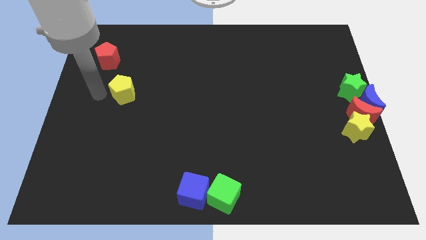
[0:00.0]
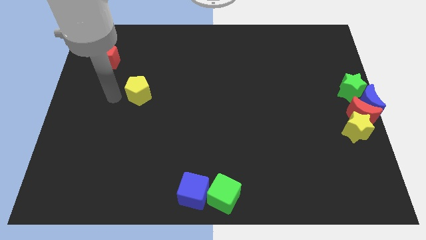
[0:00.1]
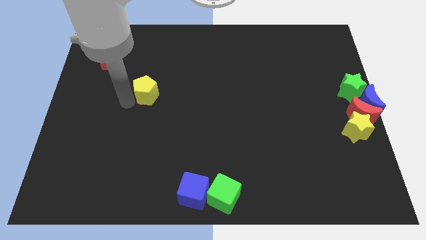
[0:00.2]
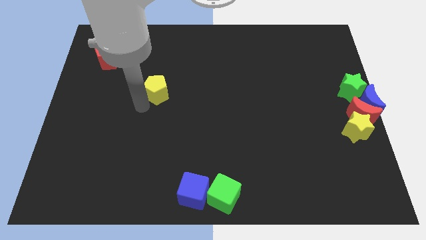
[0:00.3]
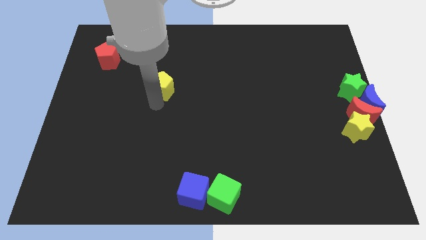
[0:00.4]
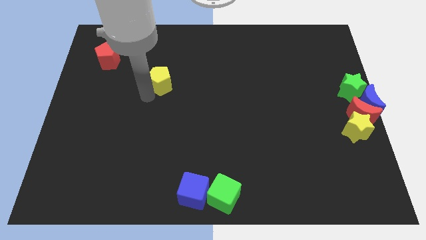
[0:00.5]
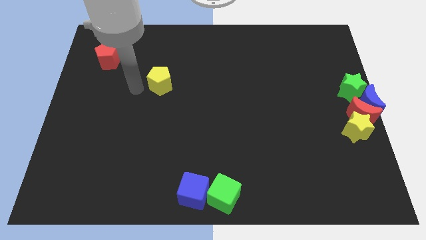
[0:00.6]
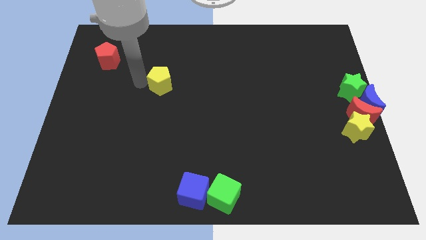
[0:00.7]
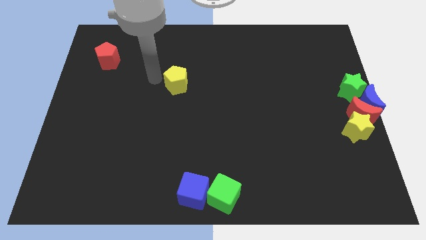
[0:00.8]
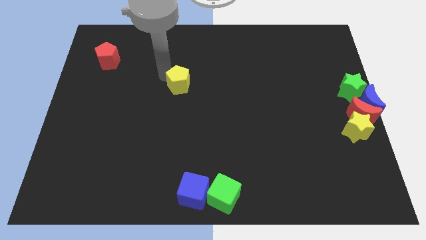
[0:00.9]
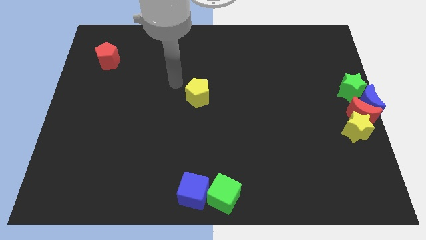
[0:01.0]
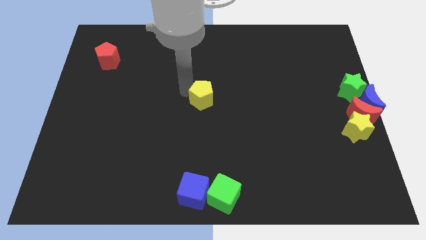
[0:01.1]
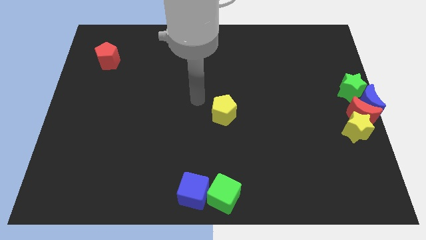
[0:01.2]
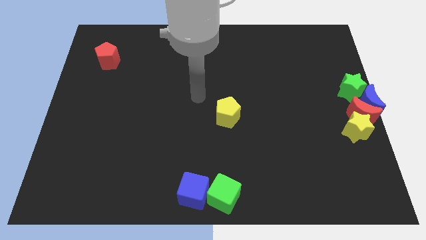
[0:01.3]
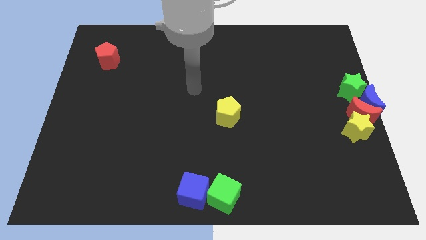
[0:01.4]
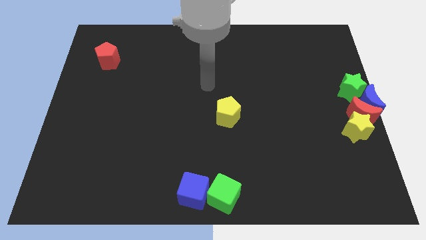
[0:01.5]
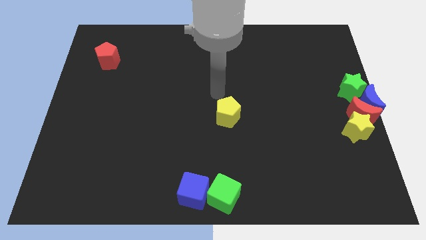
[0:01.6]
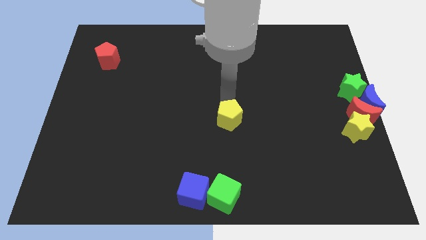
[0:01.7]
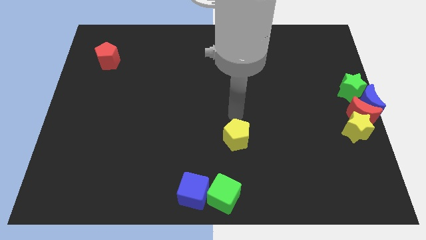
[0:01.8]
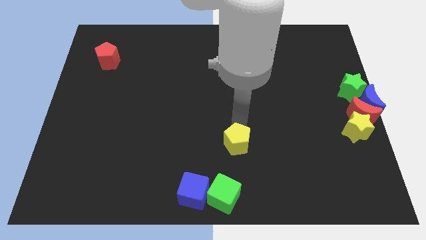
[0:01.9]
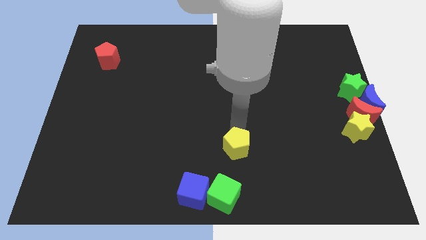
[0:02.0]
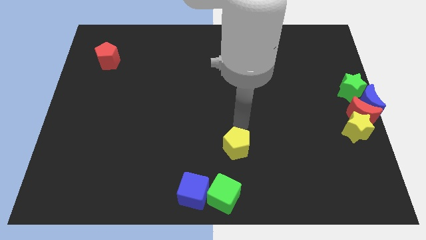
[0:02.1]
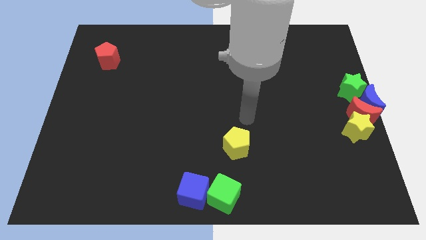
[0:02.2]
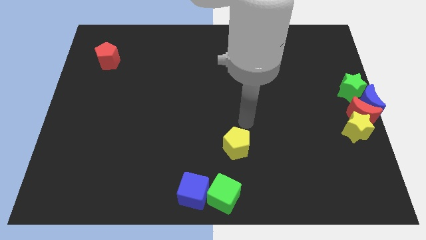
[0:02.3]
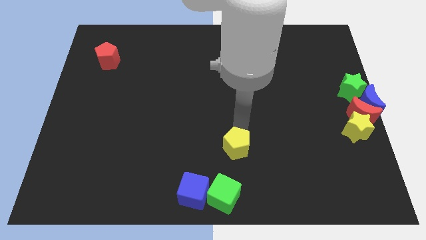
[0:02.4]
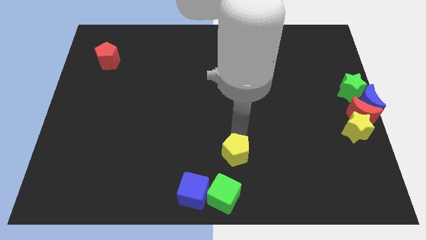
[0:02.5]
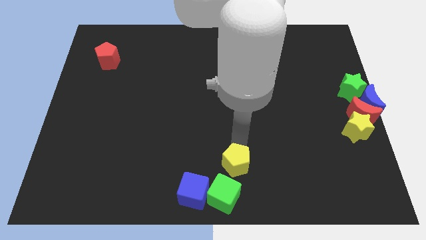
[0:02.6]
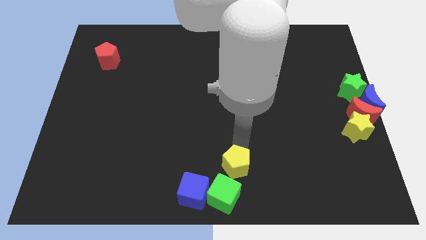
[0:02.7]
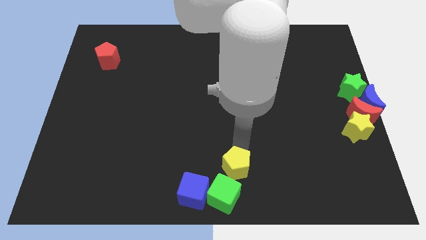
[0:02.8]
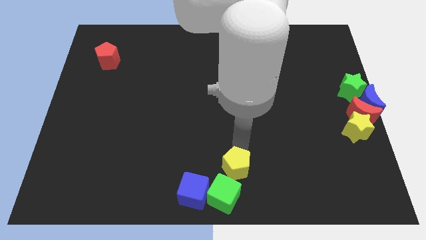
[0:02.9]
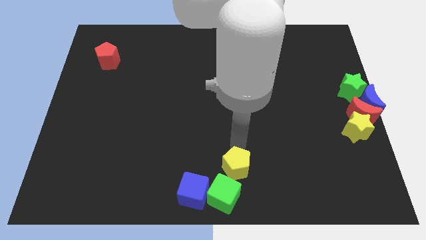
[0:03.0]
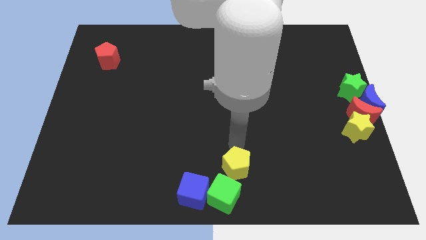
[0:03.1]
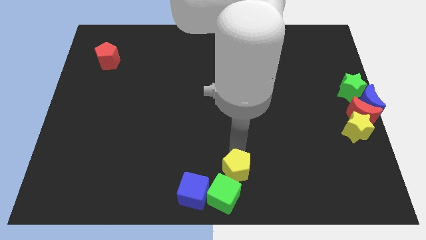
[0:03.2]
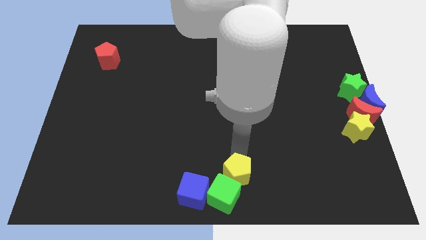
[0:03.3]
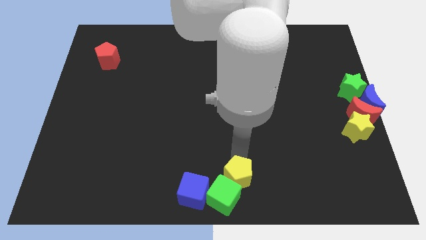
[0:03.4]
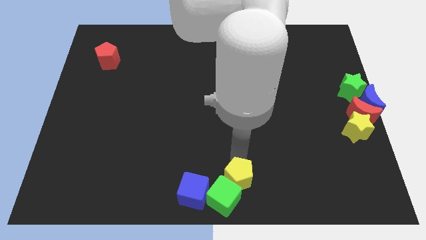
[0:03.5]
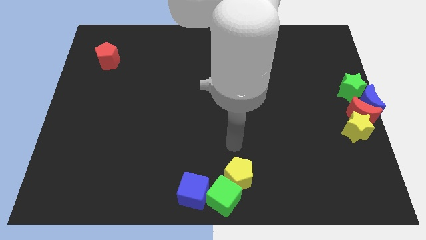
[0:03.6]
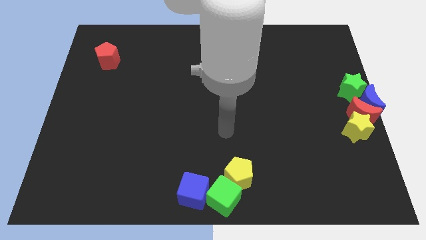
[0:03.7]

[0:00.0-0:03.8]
move the yellow pentagon top right to the green cube

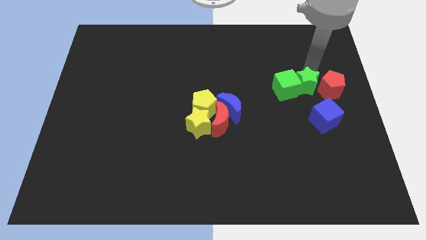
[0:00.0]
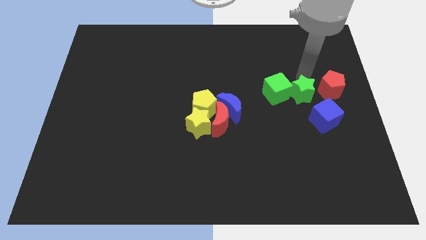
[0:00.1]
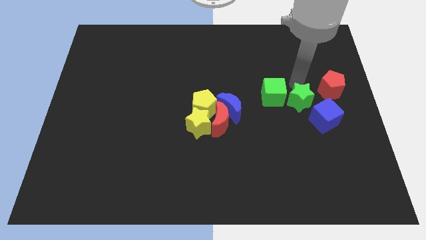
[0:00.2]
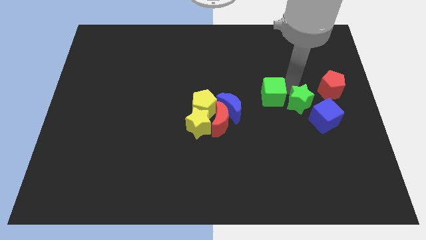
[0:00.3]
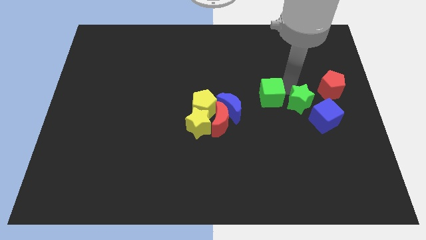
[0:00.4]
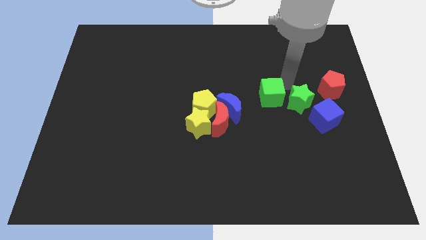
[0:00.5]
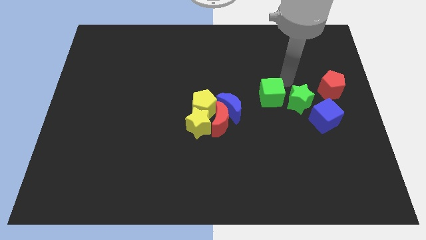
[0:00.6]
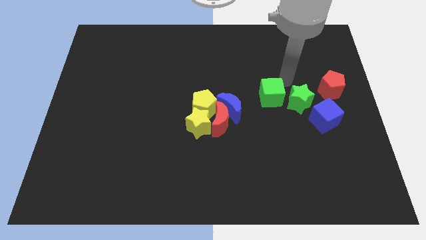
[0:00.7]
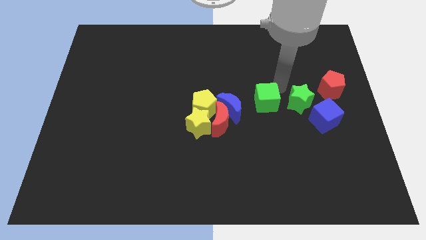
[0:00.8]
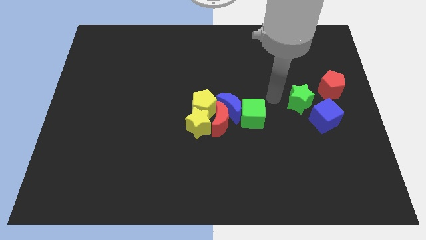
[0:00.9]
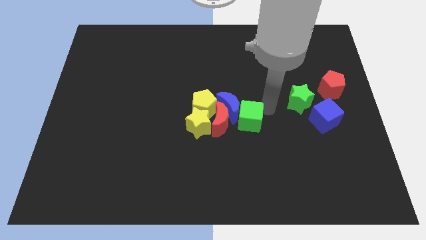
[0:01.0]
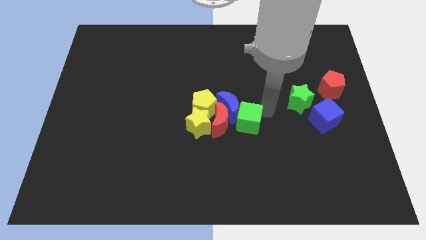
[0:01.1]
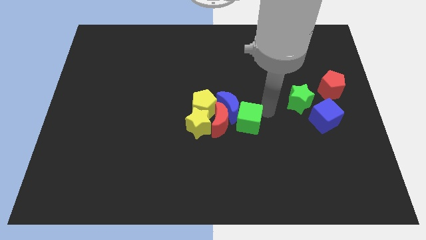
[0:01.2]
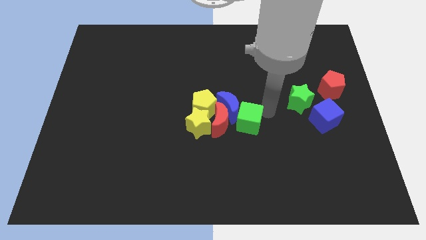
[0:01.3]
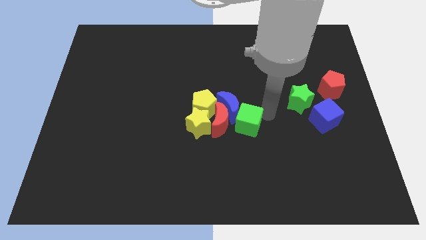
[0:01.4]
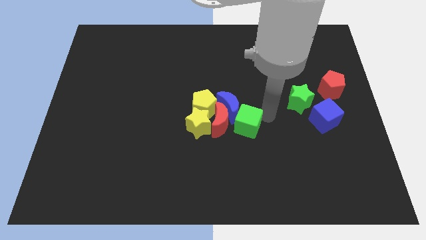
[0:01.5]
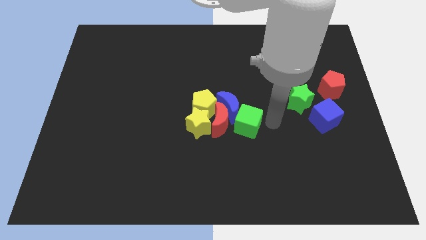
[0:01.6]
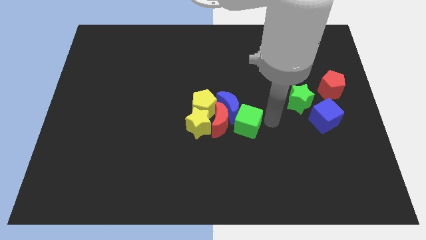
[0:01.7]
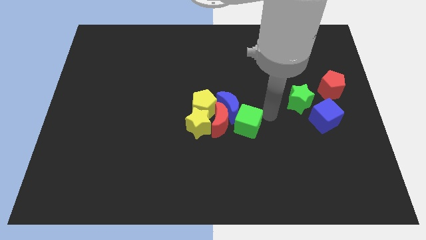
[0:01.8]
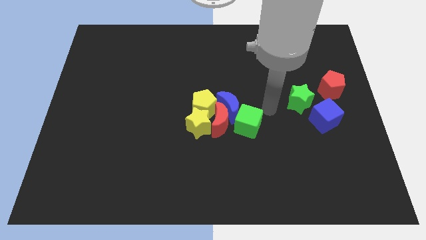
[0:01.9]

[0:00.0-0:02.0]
push the green cube to the right side of the red crescent

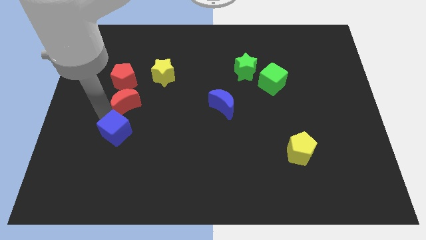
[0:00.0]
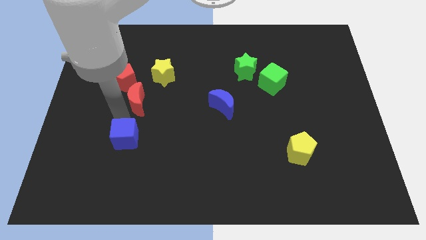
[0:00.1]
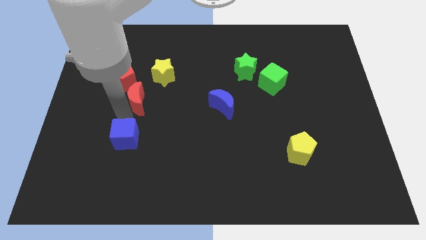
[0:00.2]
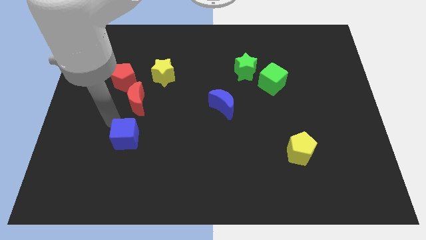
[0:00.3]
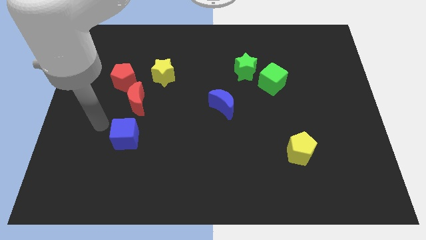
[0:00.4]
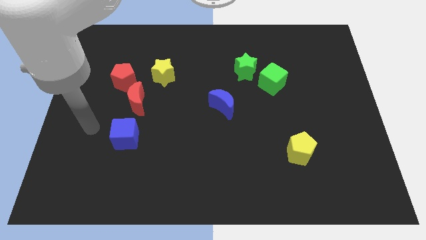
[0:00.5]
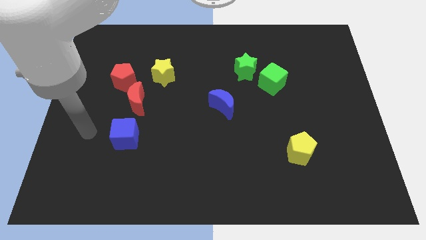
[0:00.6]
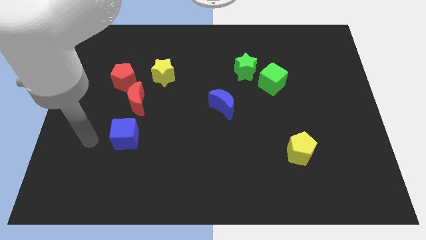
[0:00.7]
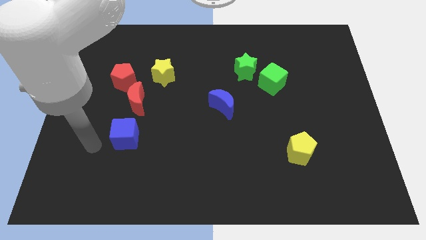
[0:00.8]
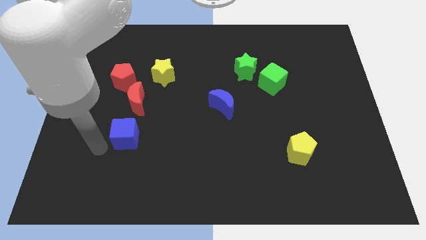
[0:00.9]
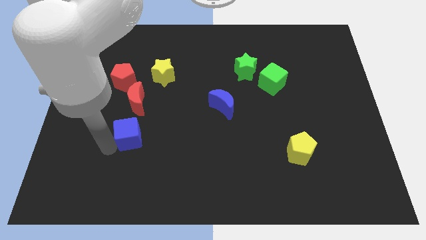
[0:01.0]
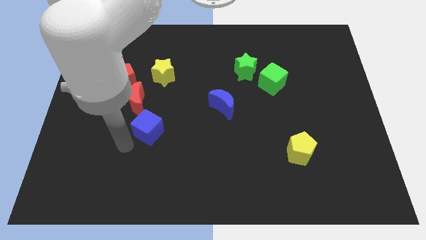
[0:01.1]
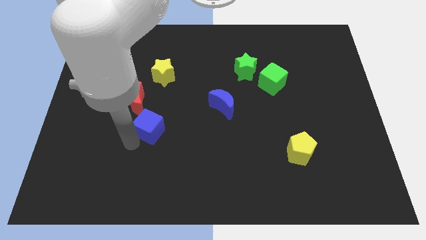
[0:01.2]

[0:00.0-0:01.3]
push the blue cube slightly to the right

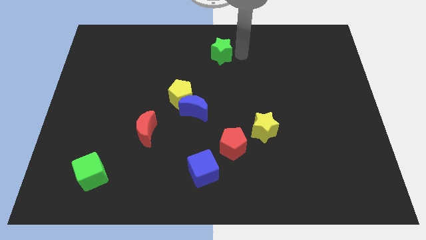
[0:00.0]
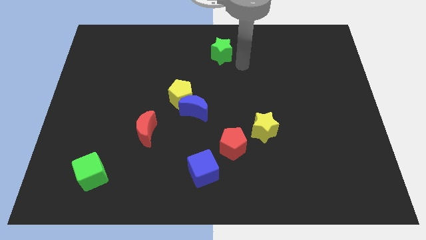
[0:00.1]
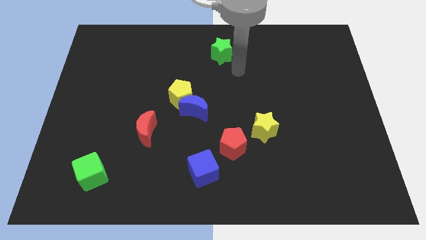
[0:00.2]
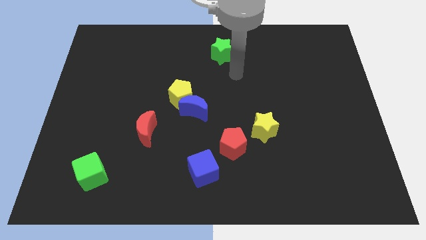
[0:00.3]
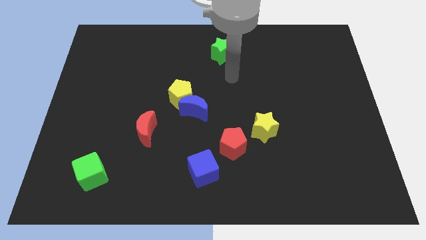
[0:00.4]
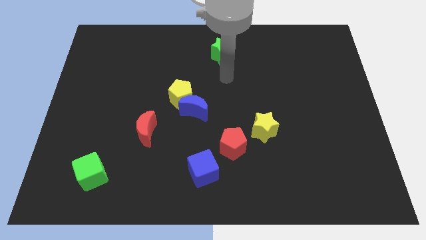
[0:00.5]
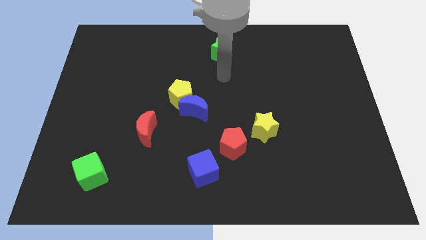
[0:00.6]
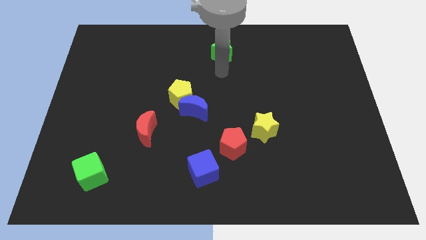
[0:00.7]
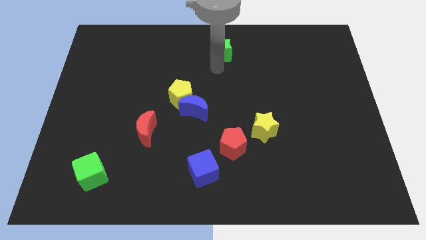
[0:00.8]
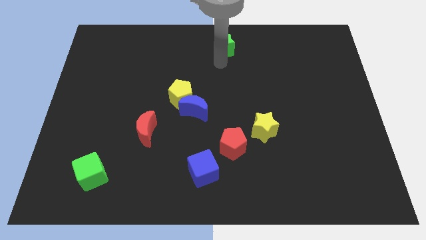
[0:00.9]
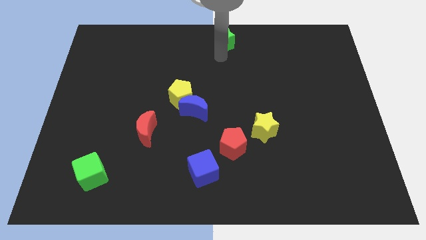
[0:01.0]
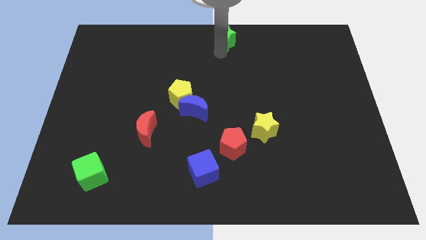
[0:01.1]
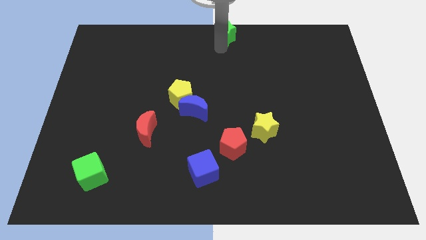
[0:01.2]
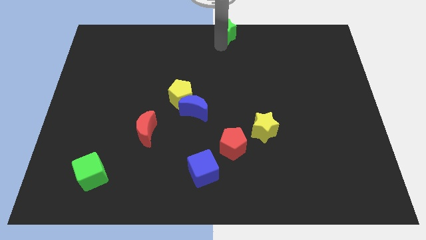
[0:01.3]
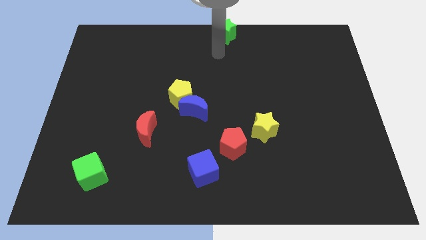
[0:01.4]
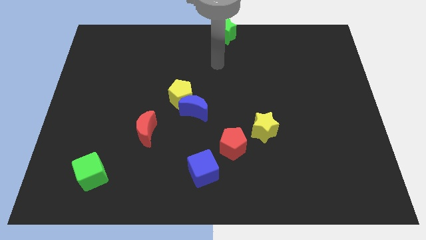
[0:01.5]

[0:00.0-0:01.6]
place green star to the top center of the board

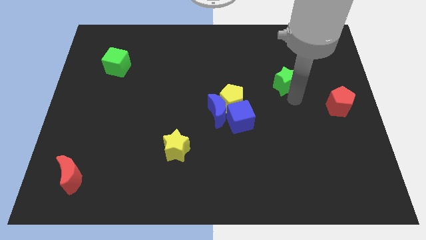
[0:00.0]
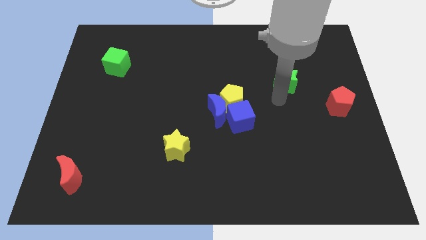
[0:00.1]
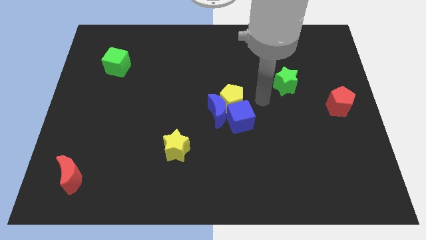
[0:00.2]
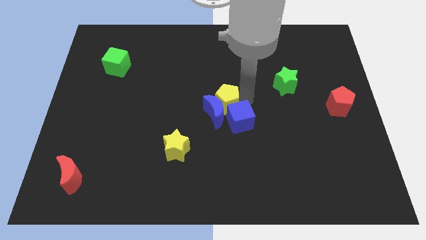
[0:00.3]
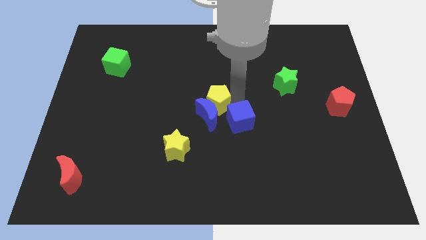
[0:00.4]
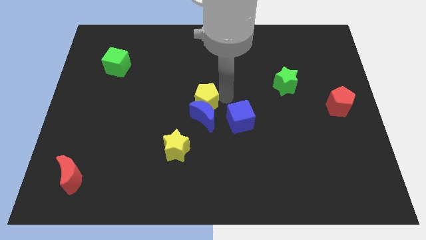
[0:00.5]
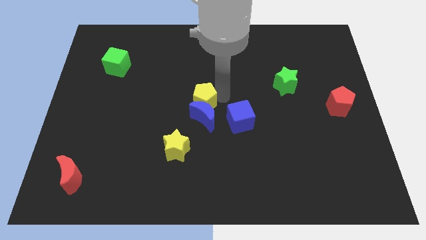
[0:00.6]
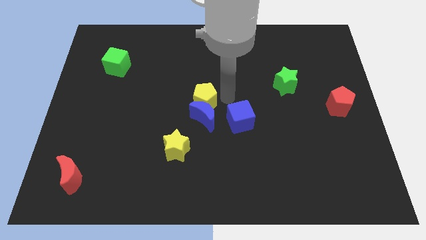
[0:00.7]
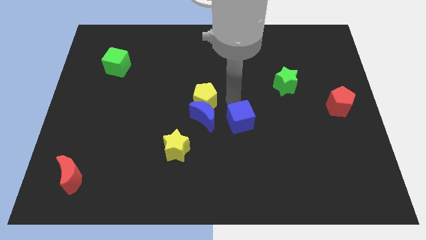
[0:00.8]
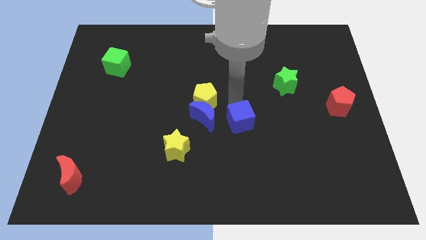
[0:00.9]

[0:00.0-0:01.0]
place yellow pentagon above blue crescent
